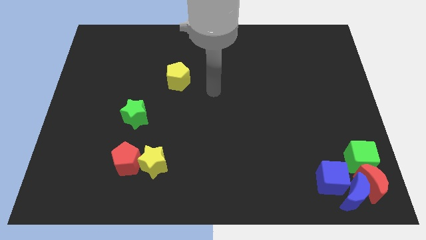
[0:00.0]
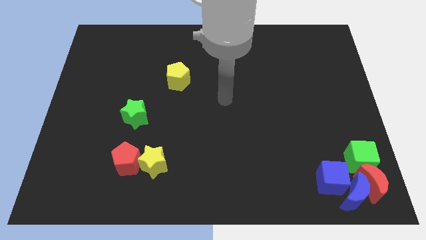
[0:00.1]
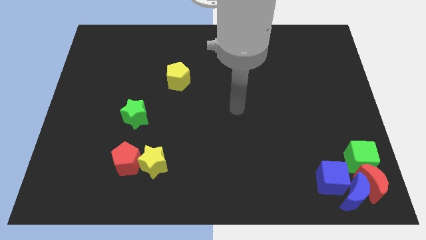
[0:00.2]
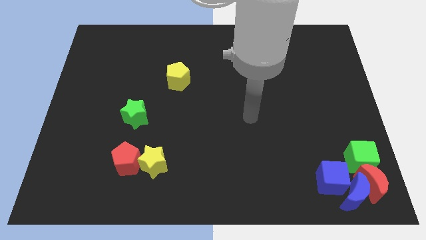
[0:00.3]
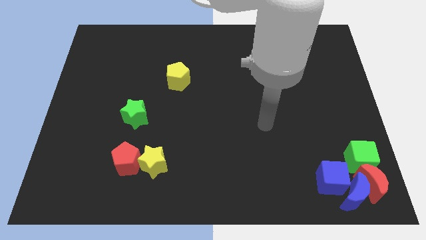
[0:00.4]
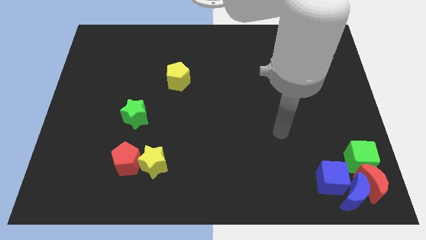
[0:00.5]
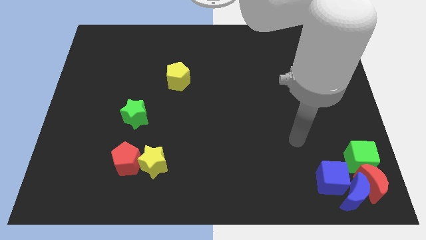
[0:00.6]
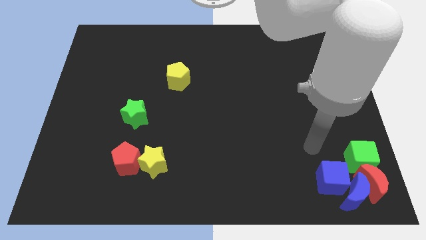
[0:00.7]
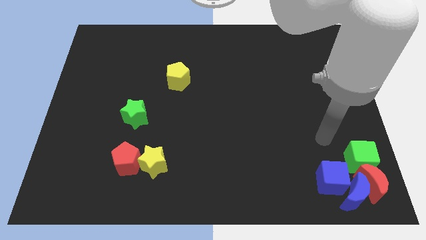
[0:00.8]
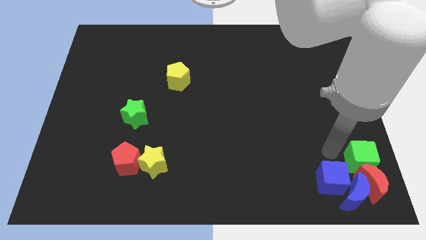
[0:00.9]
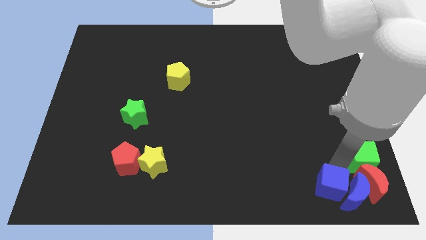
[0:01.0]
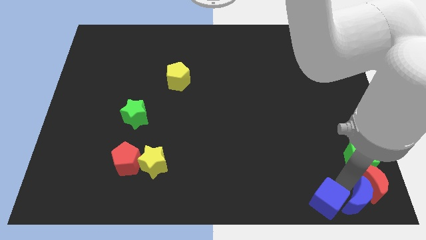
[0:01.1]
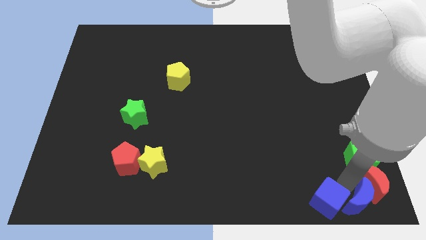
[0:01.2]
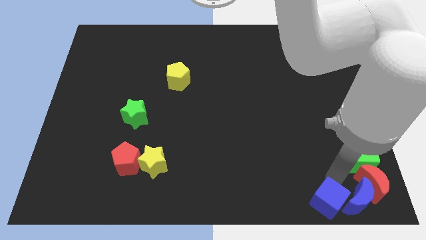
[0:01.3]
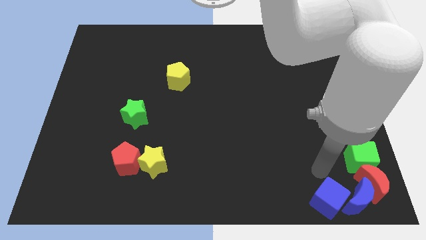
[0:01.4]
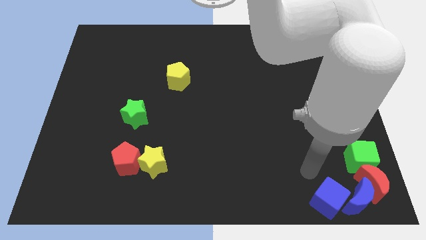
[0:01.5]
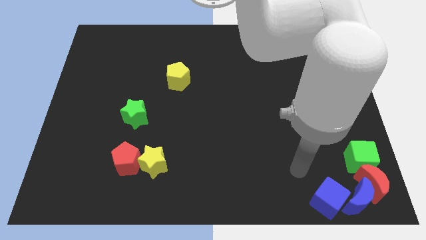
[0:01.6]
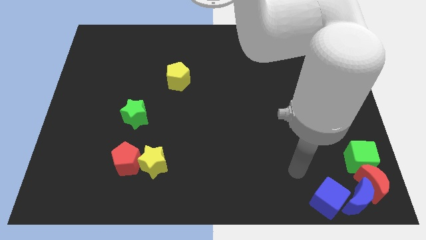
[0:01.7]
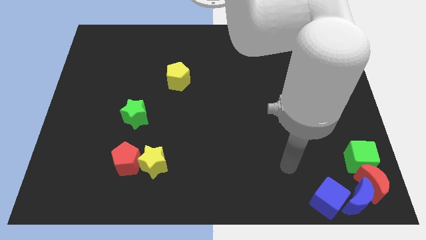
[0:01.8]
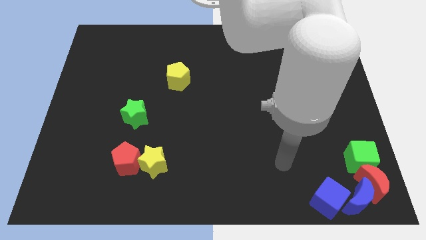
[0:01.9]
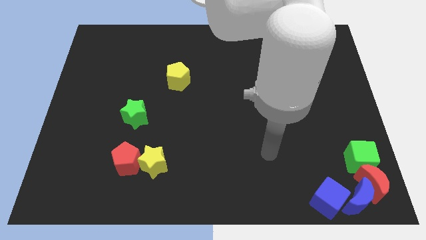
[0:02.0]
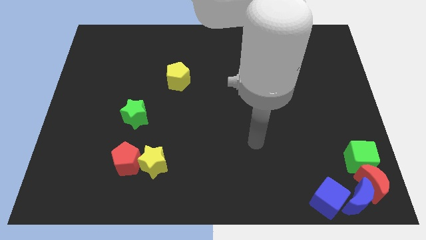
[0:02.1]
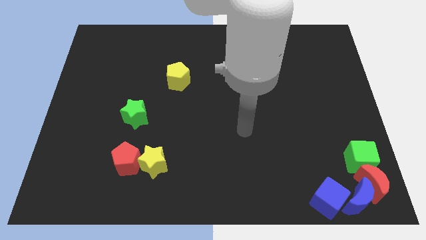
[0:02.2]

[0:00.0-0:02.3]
move the blue cube slightly downwards

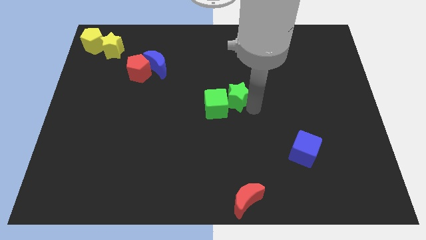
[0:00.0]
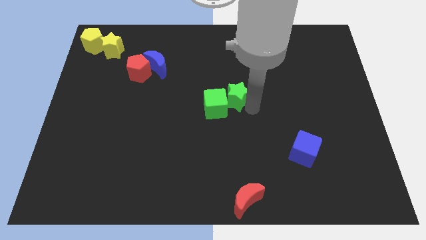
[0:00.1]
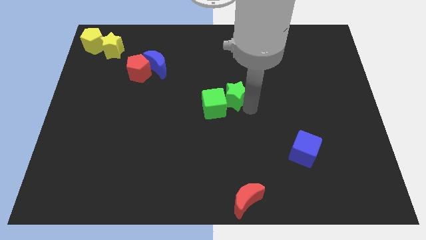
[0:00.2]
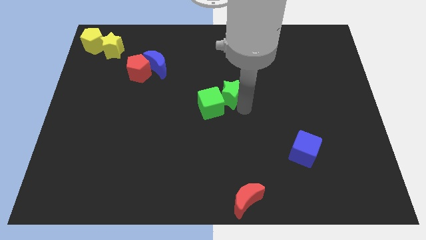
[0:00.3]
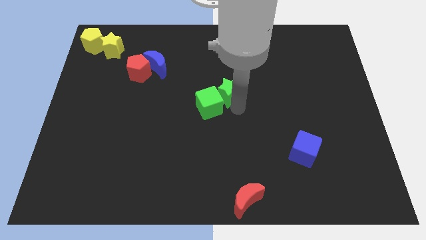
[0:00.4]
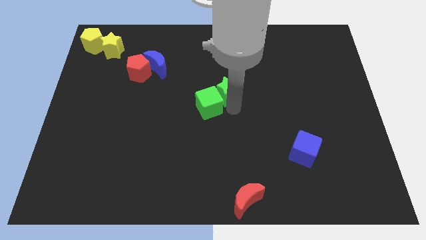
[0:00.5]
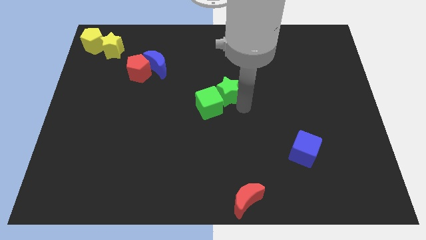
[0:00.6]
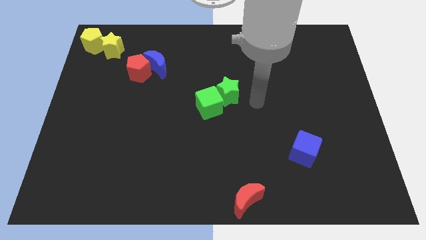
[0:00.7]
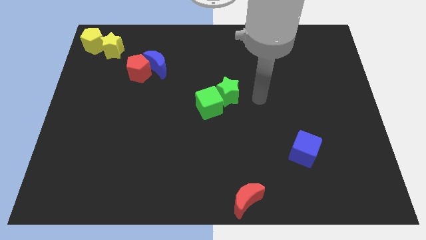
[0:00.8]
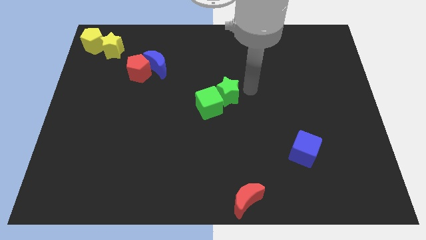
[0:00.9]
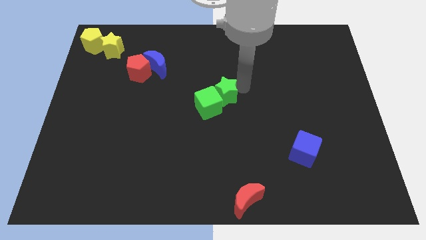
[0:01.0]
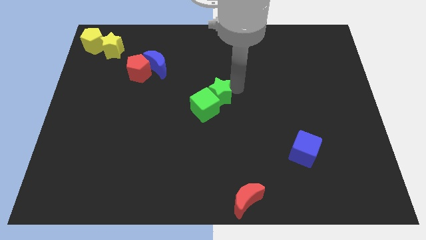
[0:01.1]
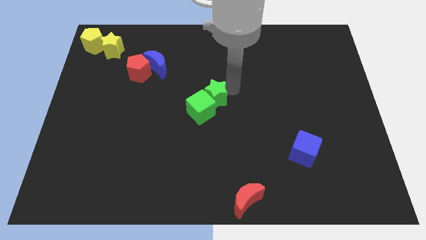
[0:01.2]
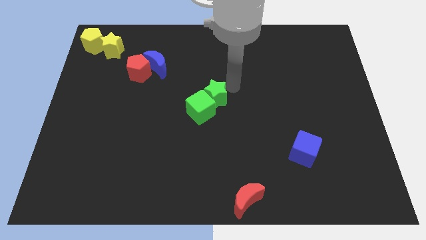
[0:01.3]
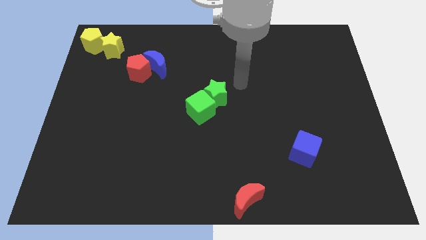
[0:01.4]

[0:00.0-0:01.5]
push green star into the green cube

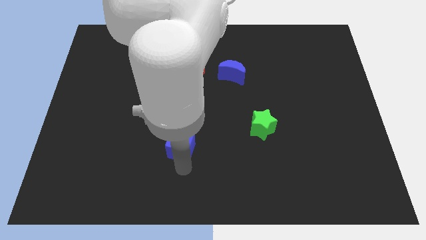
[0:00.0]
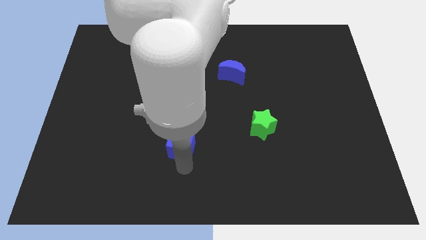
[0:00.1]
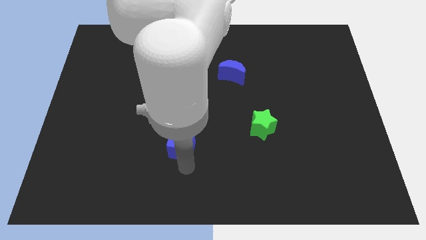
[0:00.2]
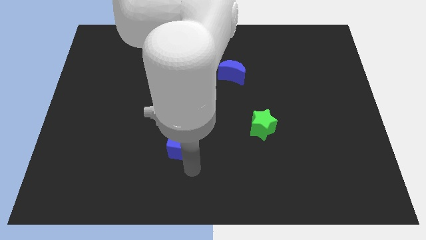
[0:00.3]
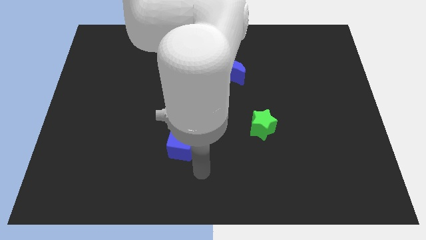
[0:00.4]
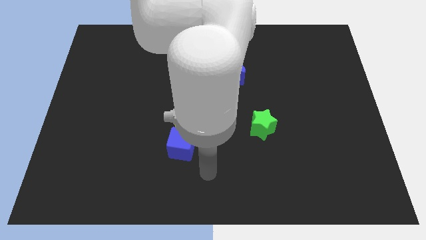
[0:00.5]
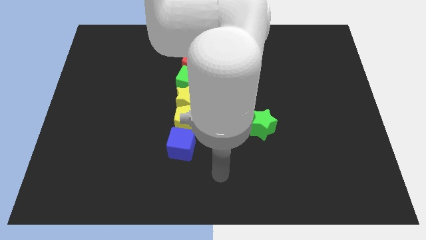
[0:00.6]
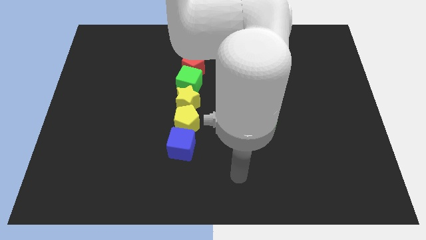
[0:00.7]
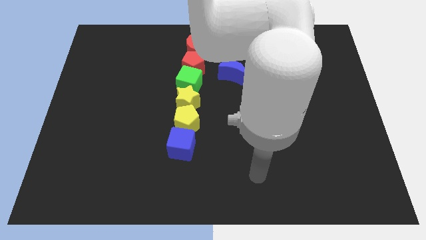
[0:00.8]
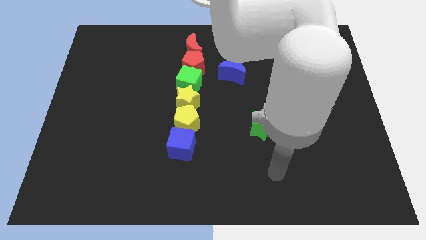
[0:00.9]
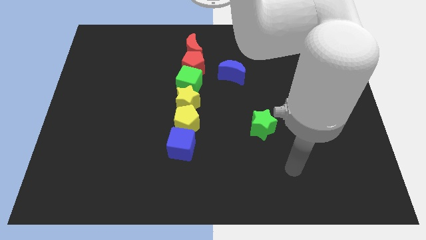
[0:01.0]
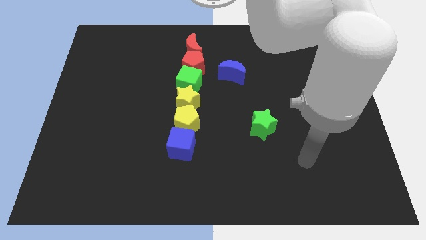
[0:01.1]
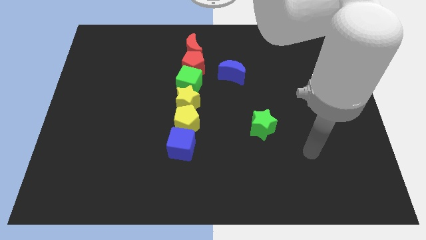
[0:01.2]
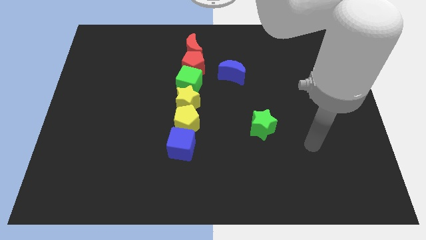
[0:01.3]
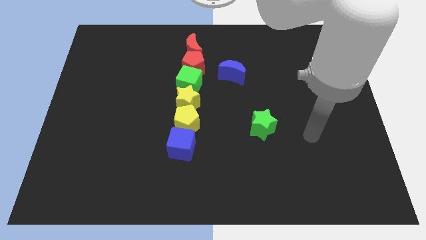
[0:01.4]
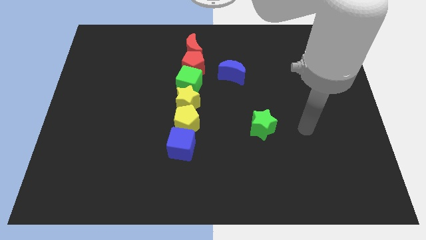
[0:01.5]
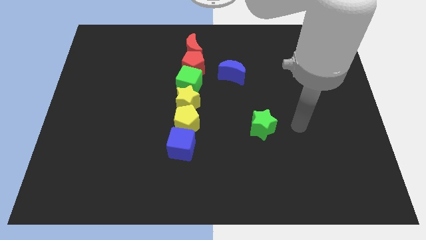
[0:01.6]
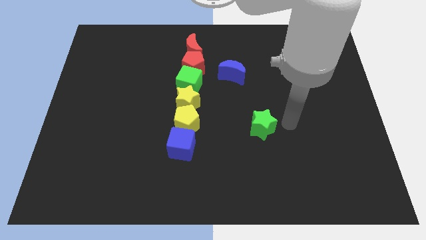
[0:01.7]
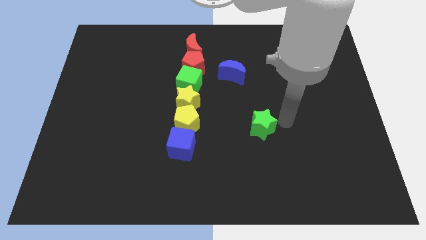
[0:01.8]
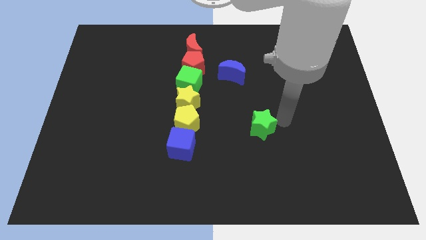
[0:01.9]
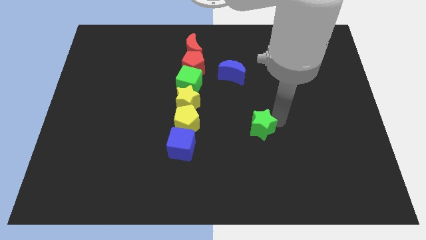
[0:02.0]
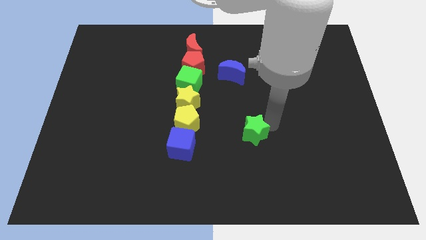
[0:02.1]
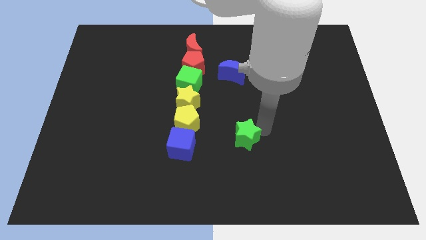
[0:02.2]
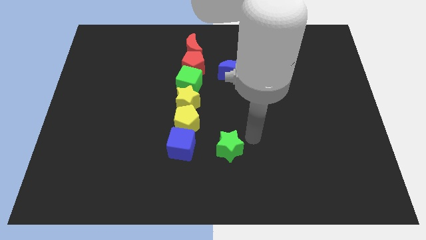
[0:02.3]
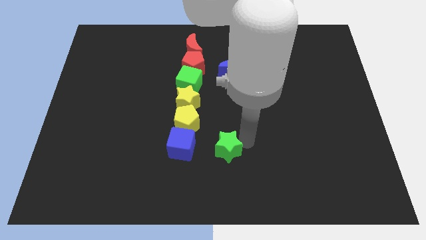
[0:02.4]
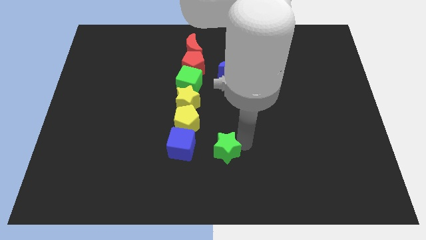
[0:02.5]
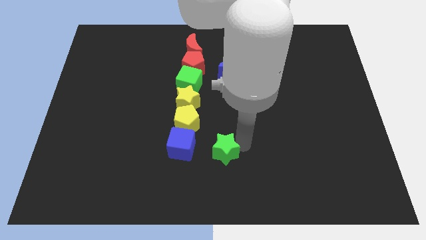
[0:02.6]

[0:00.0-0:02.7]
place the green star diagonally bottom right to the yellow pentagon

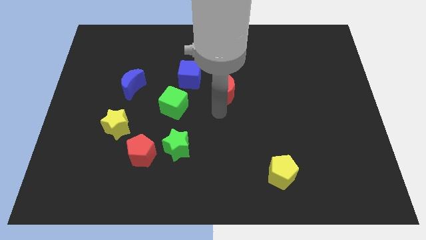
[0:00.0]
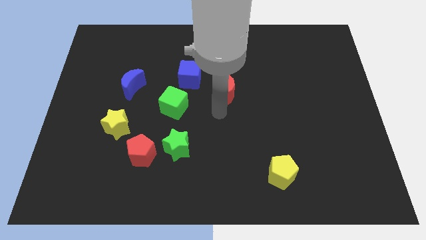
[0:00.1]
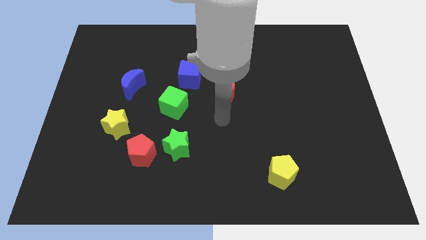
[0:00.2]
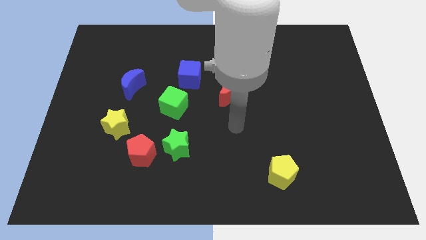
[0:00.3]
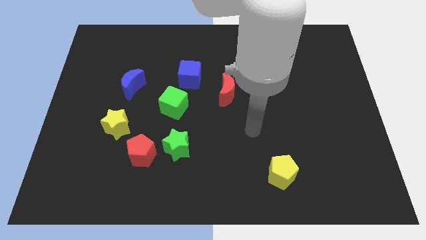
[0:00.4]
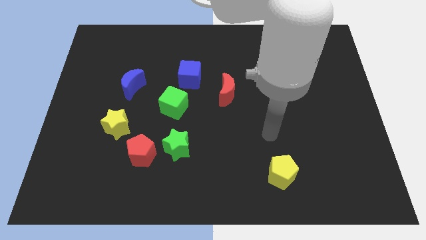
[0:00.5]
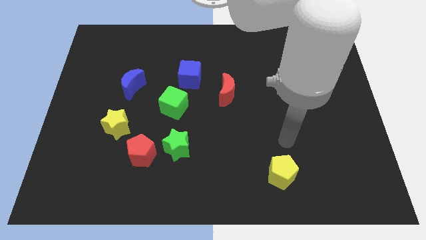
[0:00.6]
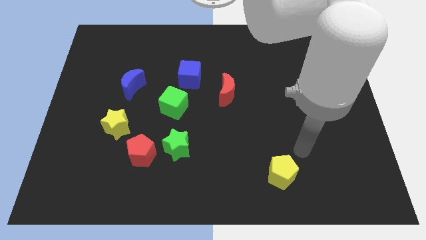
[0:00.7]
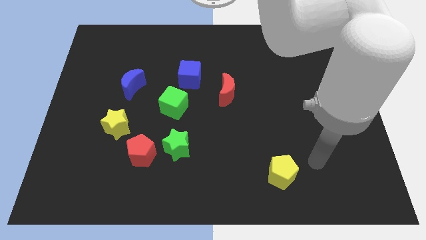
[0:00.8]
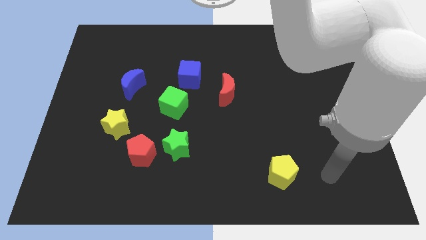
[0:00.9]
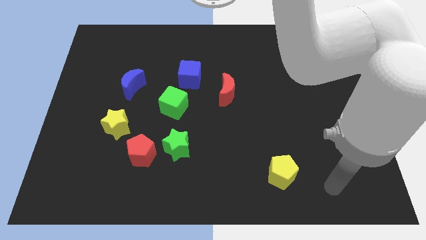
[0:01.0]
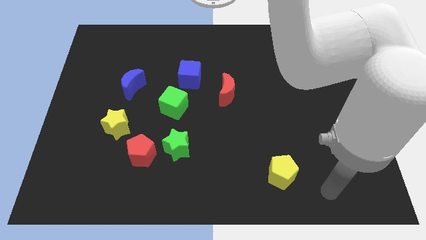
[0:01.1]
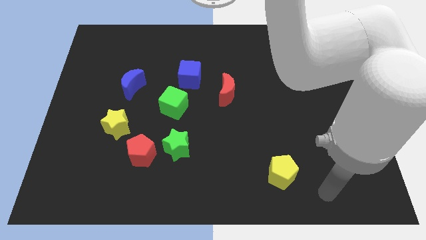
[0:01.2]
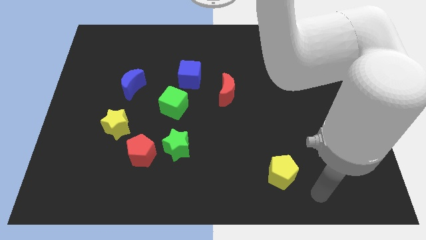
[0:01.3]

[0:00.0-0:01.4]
move your arm towards the yellow pentagon

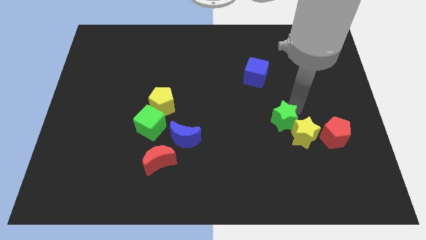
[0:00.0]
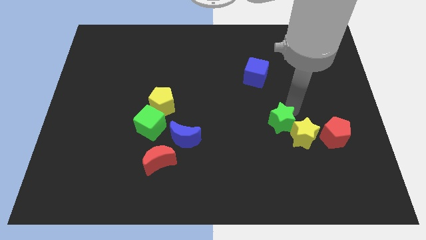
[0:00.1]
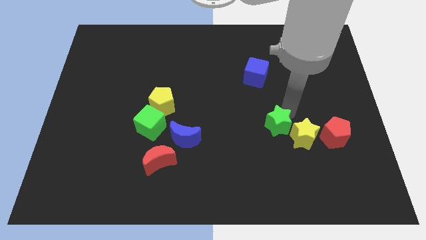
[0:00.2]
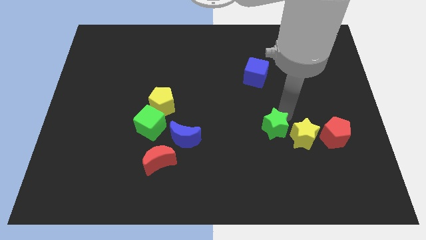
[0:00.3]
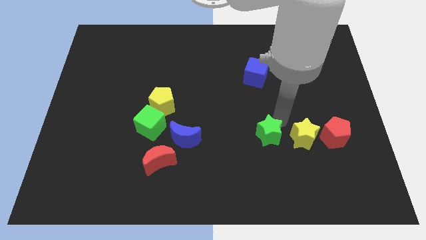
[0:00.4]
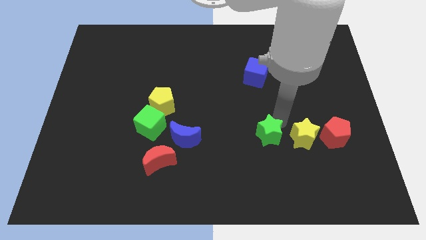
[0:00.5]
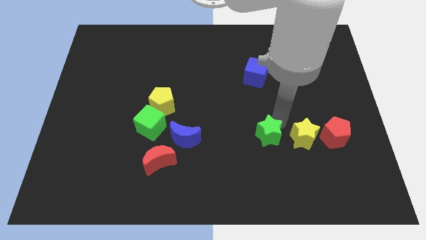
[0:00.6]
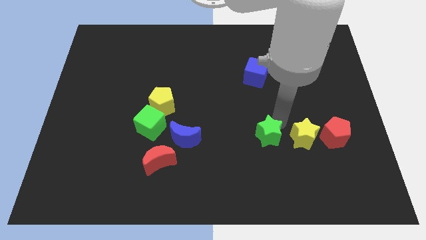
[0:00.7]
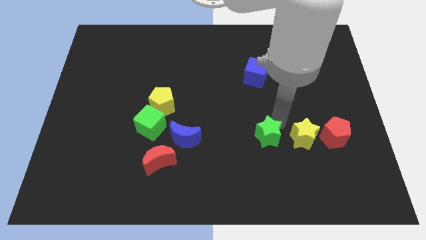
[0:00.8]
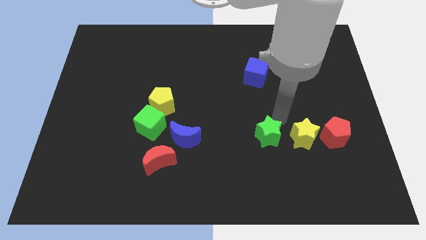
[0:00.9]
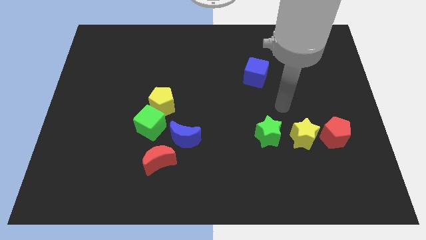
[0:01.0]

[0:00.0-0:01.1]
place green star left to yellow star
